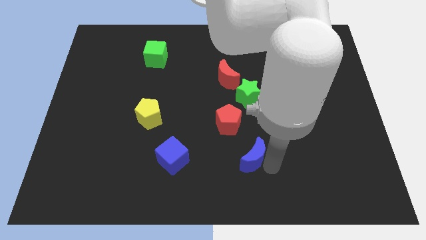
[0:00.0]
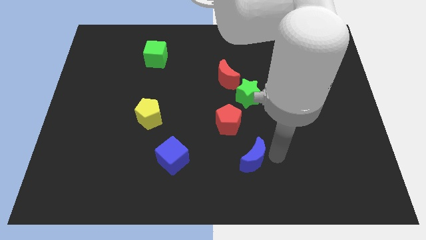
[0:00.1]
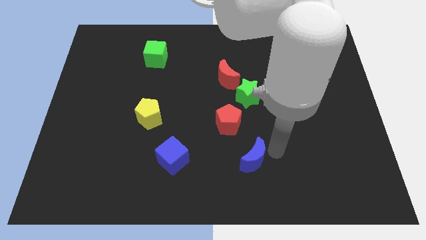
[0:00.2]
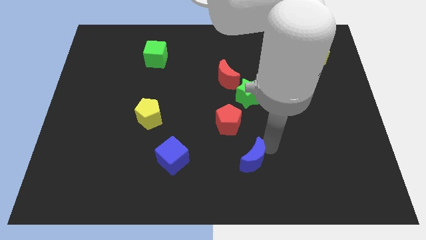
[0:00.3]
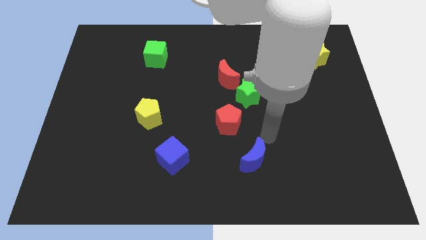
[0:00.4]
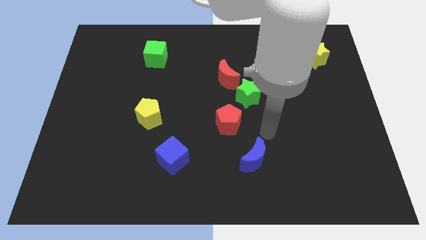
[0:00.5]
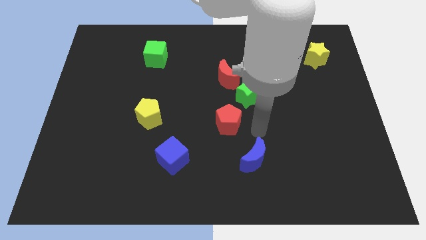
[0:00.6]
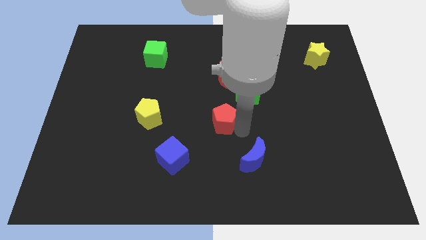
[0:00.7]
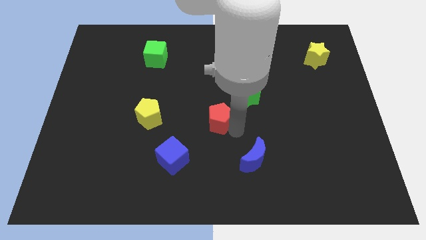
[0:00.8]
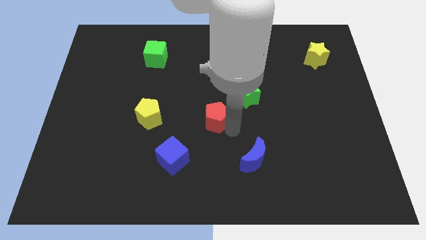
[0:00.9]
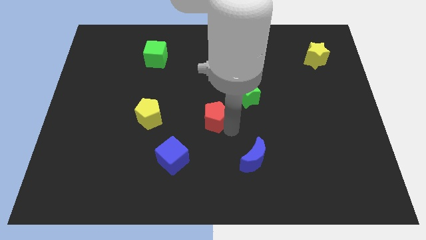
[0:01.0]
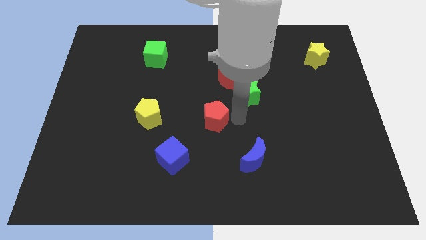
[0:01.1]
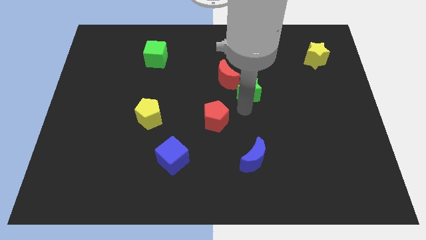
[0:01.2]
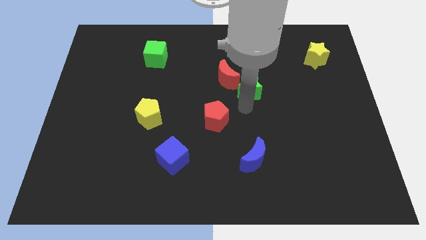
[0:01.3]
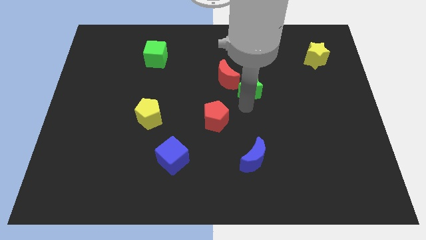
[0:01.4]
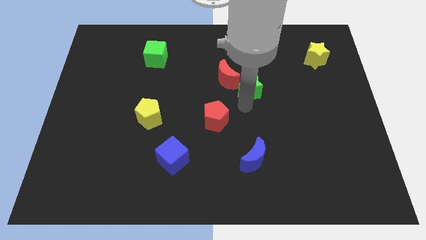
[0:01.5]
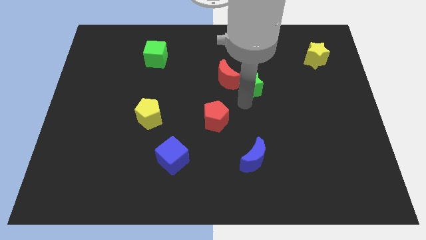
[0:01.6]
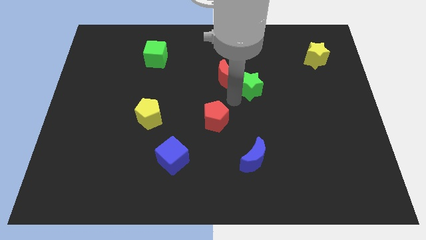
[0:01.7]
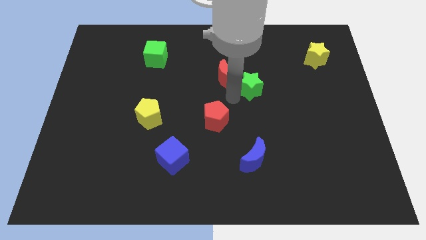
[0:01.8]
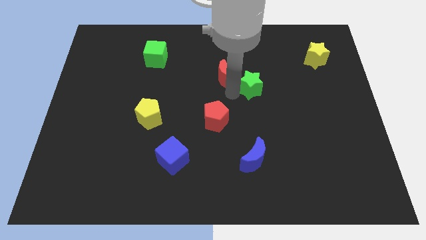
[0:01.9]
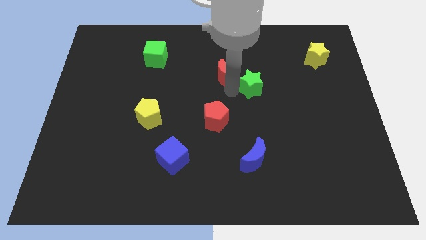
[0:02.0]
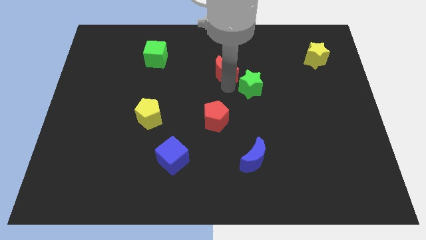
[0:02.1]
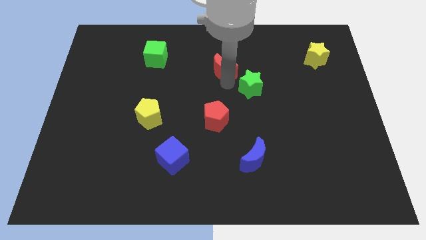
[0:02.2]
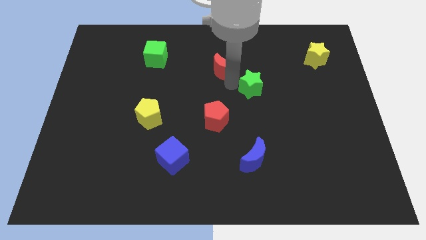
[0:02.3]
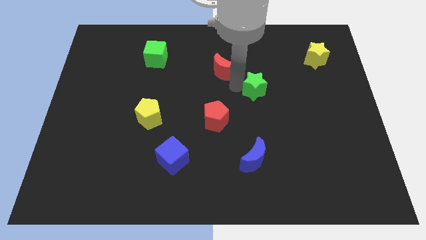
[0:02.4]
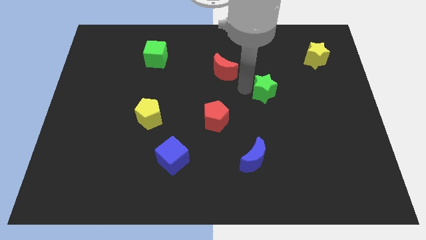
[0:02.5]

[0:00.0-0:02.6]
move the red pentagon red moon and the green star to form a triangle

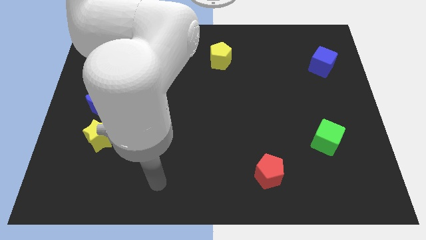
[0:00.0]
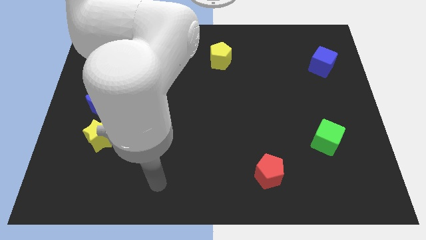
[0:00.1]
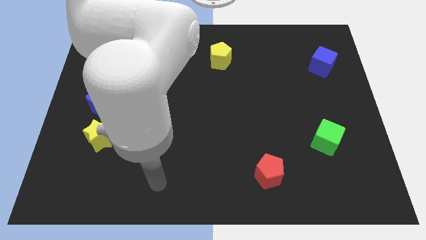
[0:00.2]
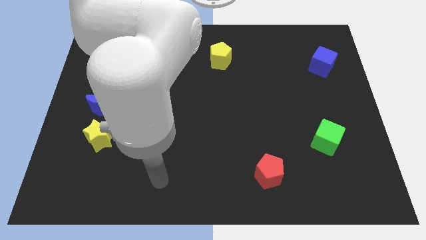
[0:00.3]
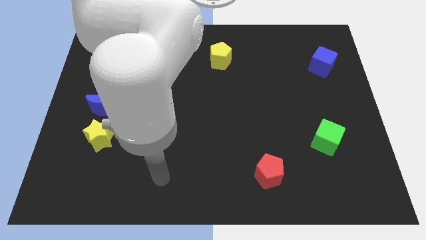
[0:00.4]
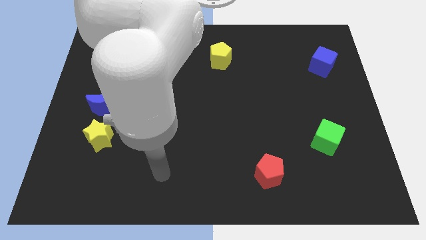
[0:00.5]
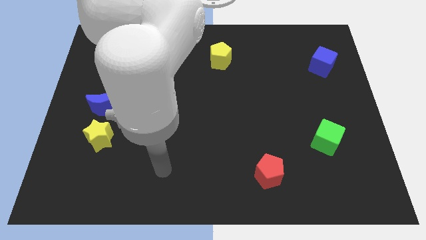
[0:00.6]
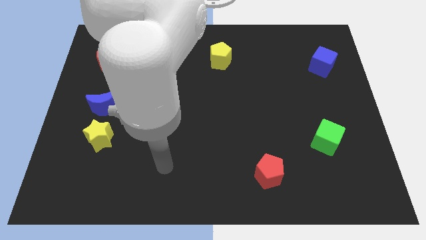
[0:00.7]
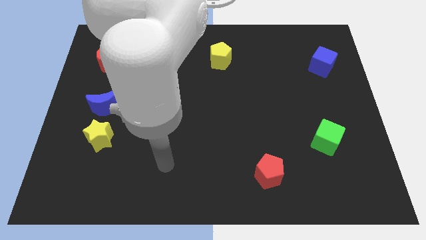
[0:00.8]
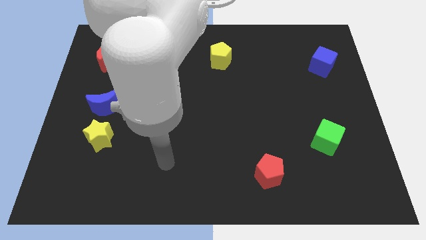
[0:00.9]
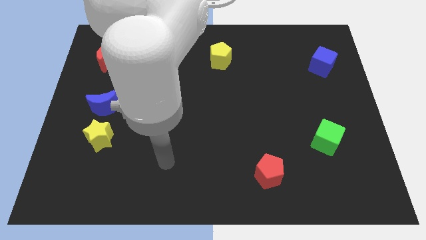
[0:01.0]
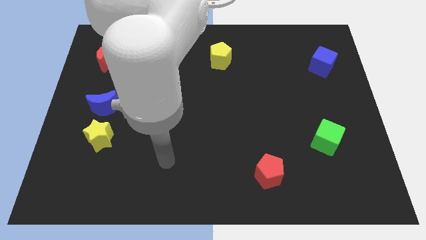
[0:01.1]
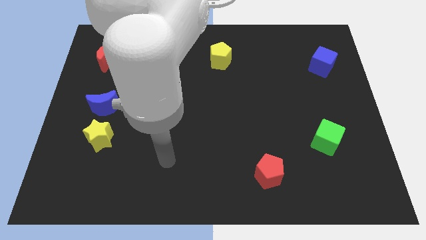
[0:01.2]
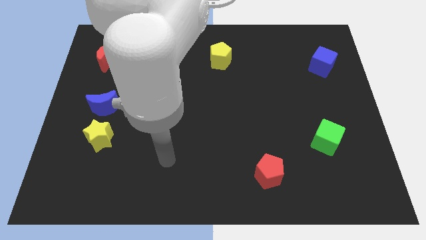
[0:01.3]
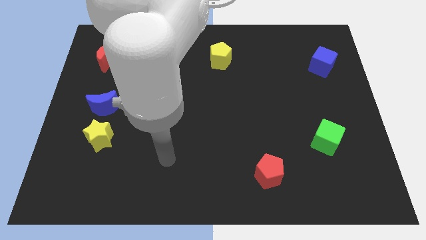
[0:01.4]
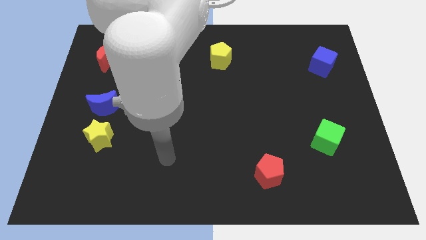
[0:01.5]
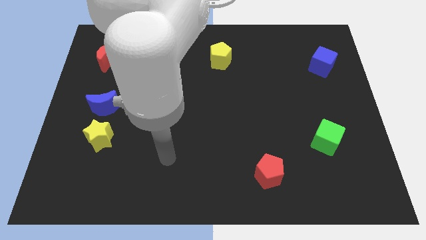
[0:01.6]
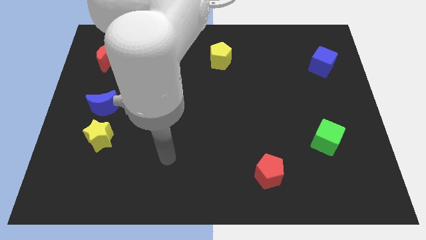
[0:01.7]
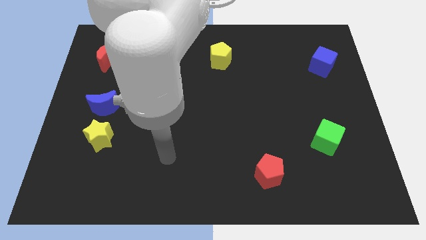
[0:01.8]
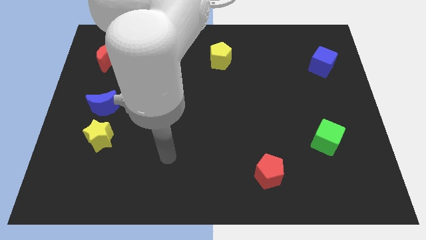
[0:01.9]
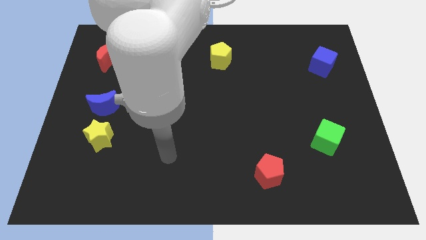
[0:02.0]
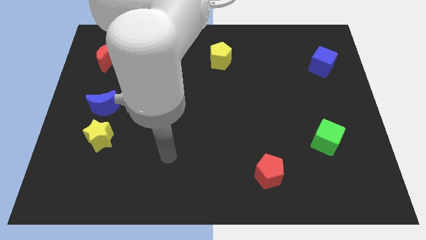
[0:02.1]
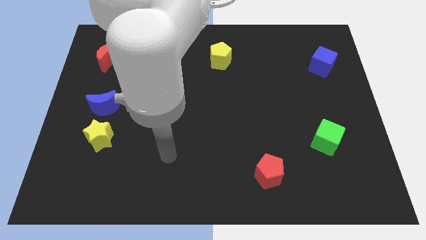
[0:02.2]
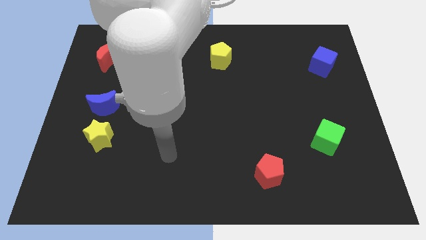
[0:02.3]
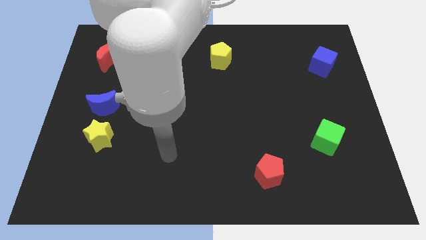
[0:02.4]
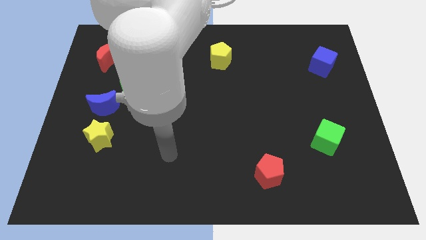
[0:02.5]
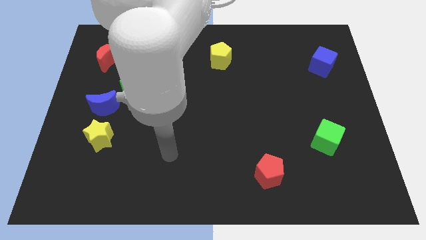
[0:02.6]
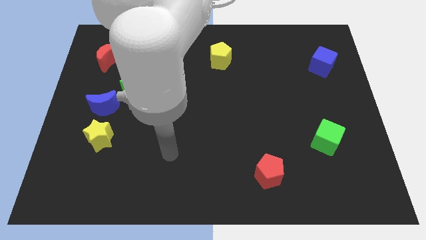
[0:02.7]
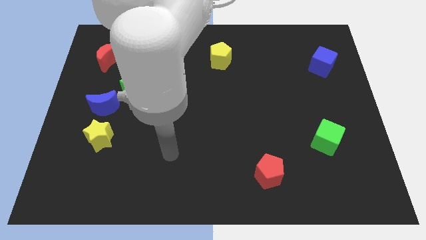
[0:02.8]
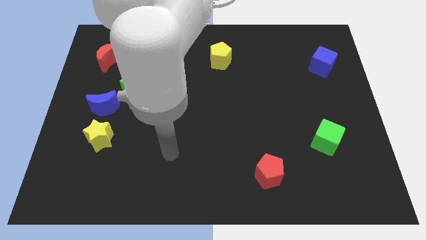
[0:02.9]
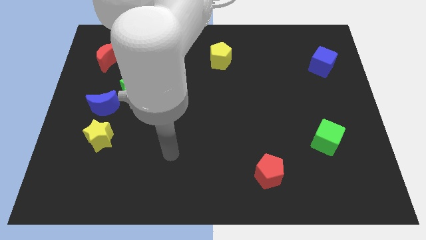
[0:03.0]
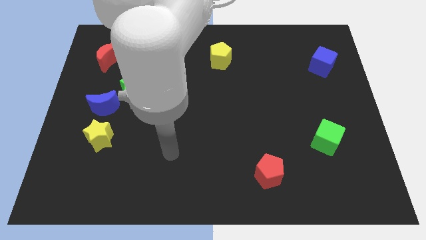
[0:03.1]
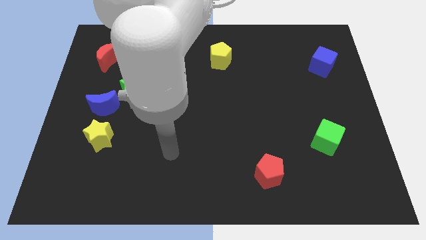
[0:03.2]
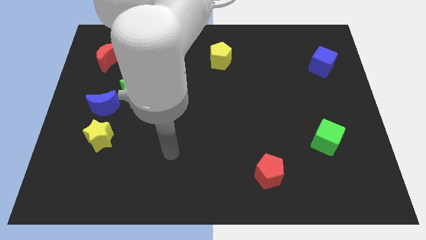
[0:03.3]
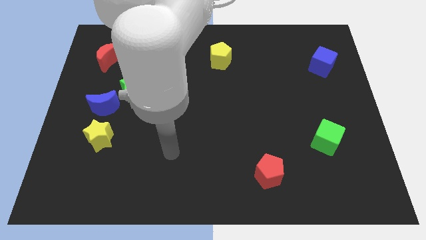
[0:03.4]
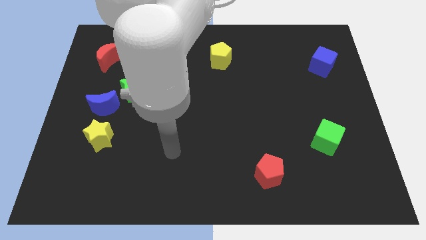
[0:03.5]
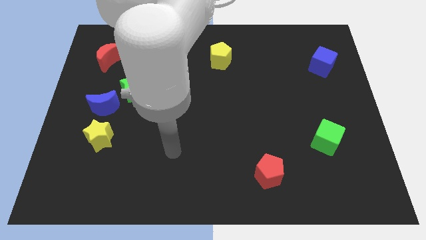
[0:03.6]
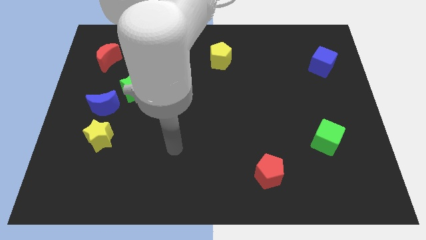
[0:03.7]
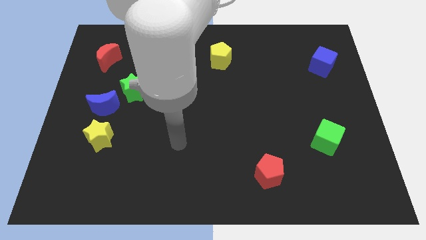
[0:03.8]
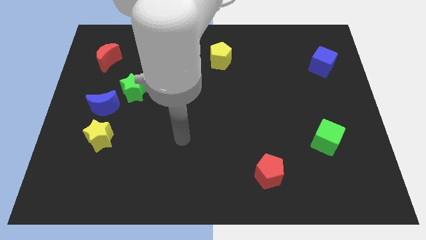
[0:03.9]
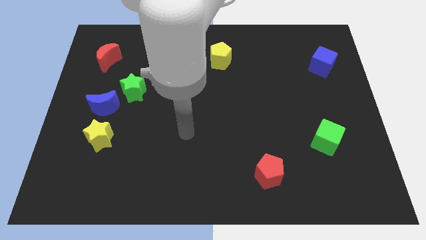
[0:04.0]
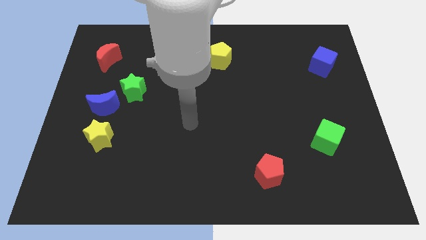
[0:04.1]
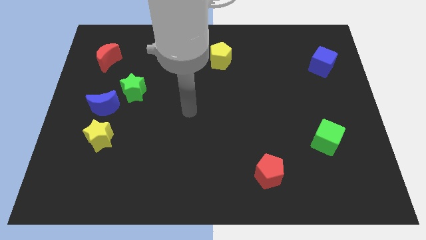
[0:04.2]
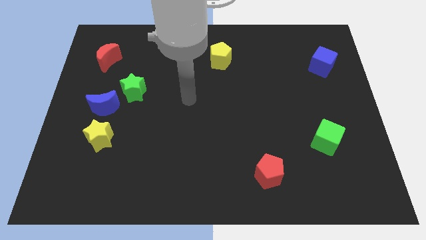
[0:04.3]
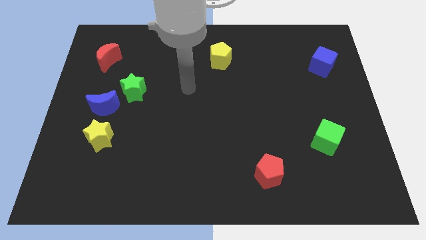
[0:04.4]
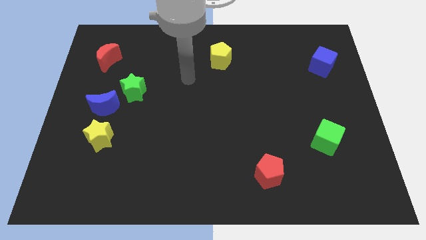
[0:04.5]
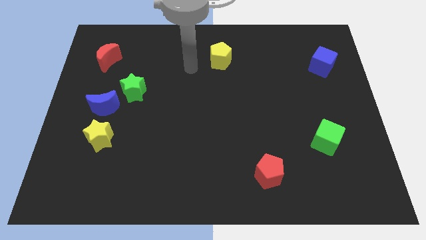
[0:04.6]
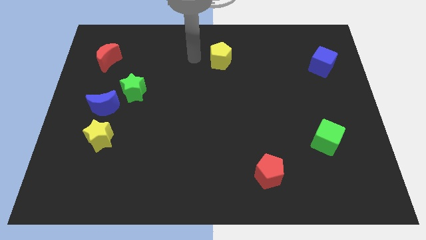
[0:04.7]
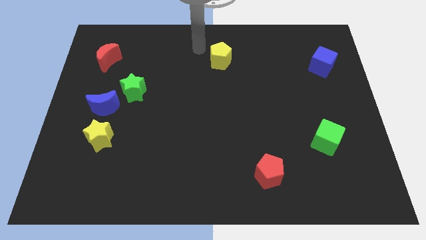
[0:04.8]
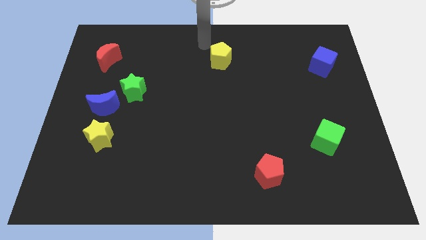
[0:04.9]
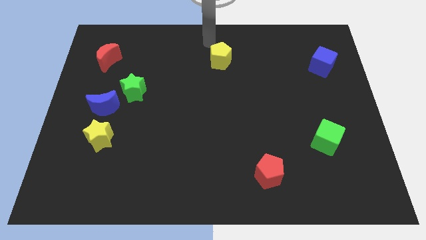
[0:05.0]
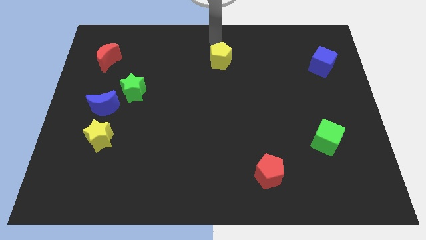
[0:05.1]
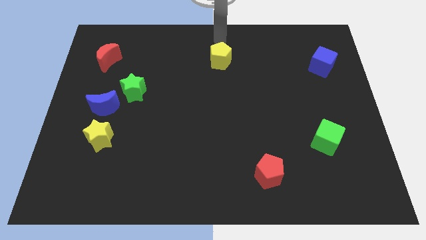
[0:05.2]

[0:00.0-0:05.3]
move your arm towards the top of yellow pentagon

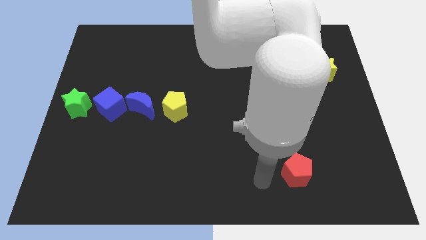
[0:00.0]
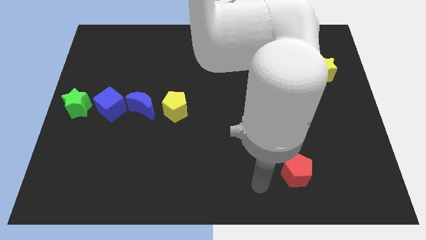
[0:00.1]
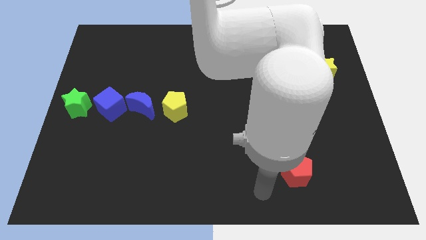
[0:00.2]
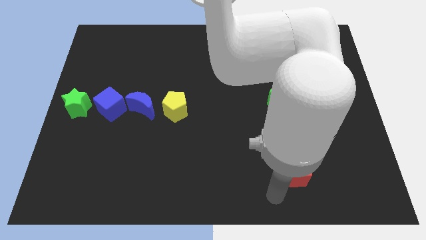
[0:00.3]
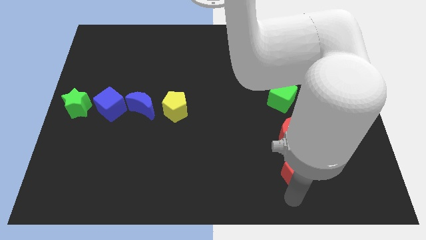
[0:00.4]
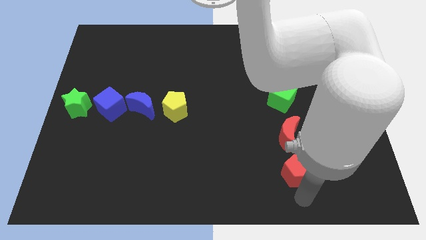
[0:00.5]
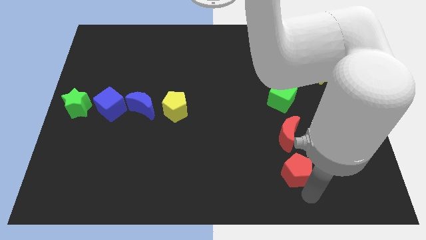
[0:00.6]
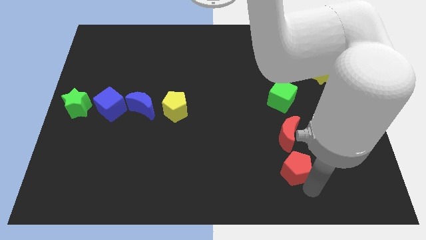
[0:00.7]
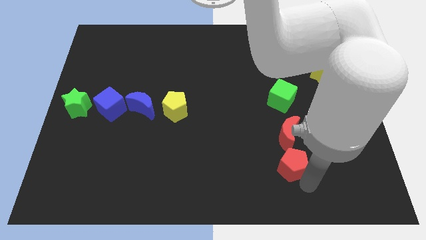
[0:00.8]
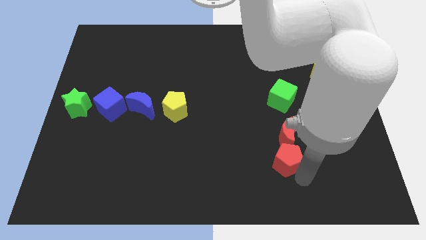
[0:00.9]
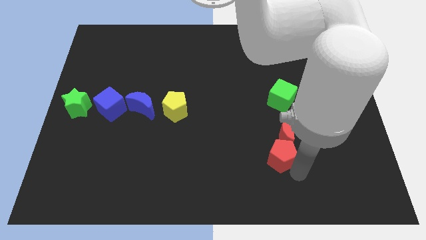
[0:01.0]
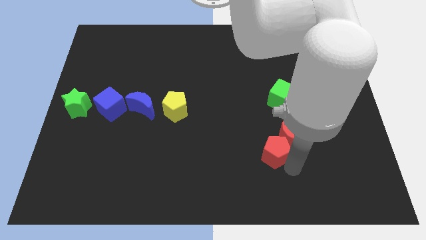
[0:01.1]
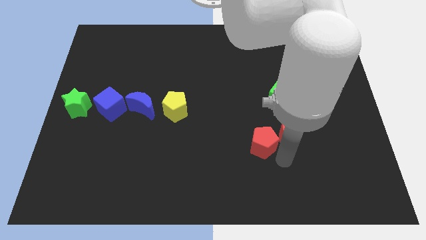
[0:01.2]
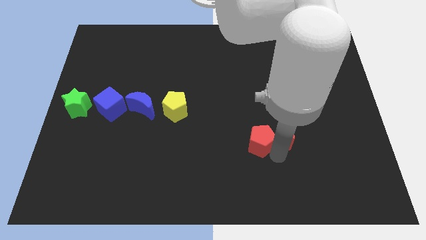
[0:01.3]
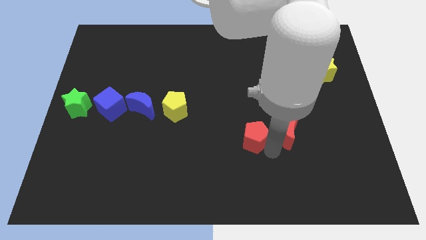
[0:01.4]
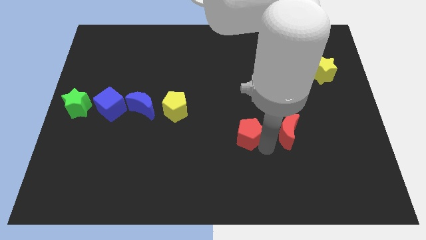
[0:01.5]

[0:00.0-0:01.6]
place the red pentagon to the left side of the red crescent
